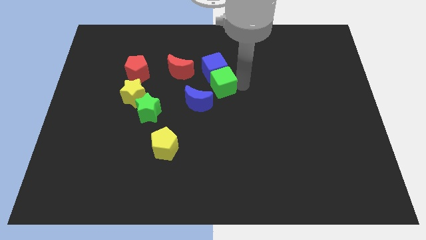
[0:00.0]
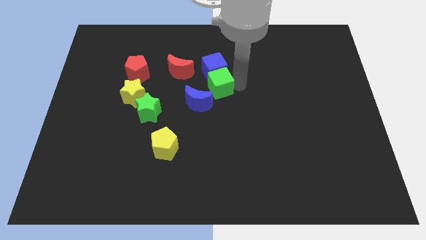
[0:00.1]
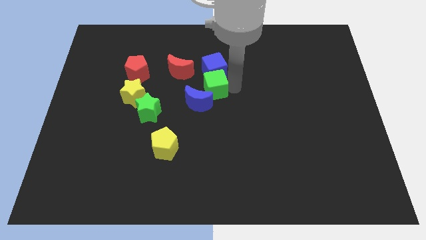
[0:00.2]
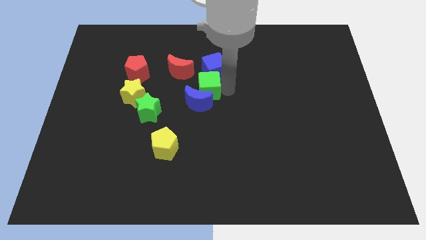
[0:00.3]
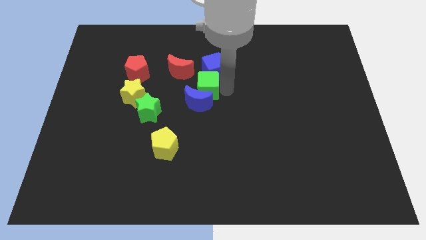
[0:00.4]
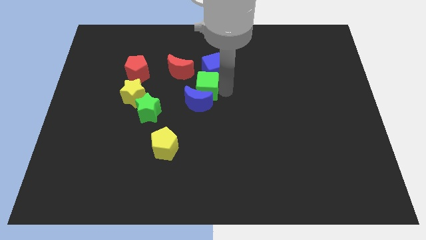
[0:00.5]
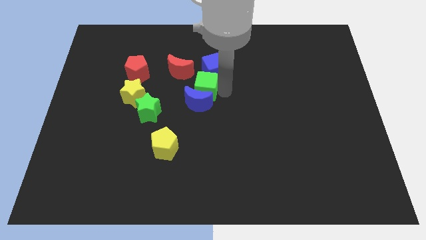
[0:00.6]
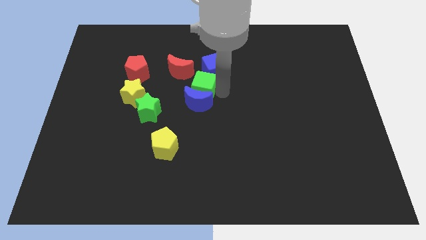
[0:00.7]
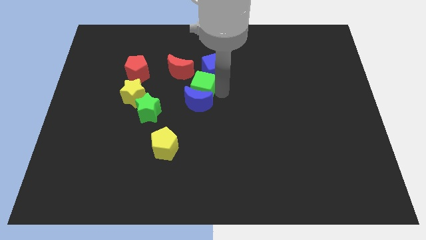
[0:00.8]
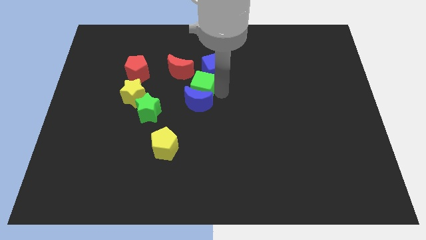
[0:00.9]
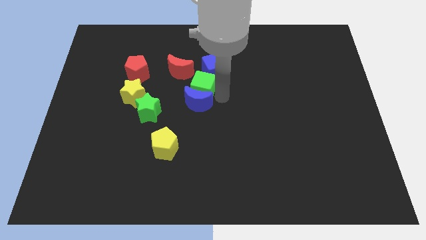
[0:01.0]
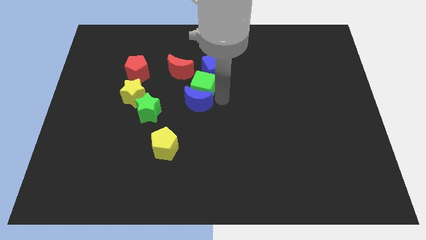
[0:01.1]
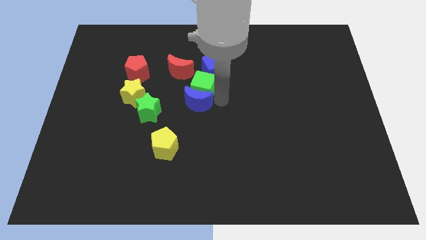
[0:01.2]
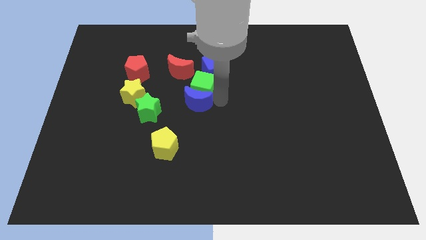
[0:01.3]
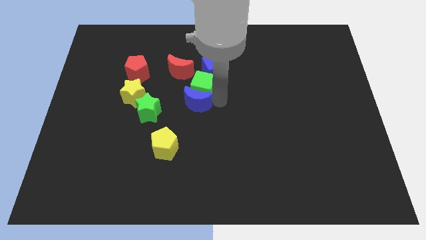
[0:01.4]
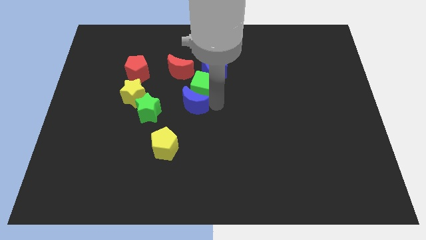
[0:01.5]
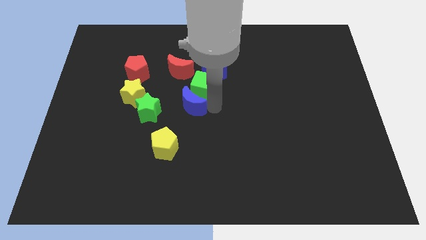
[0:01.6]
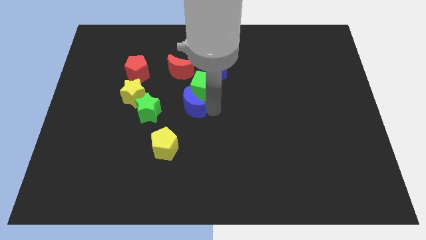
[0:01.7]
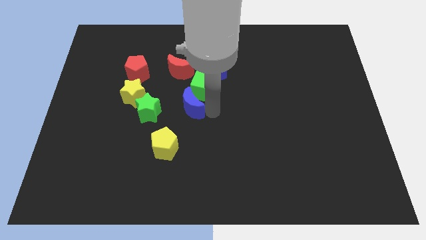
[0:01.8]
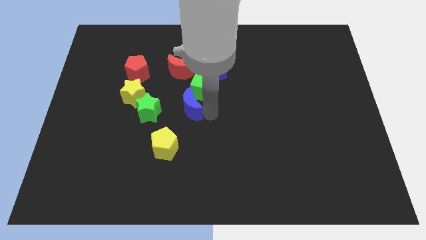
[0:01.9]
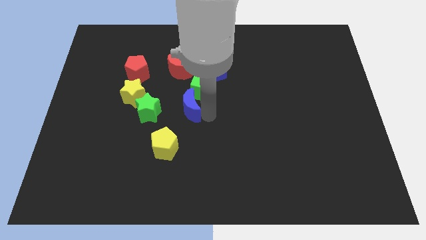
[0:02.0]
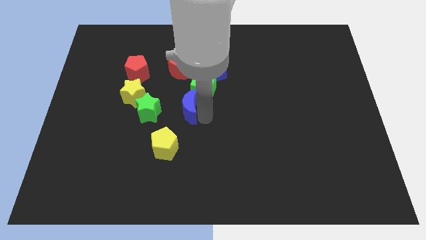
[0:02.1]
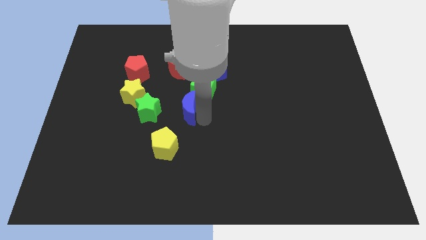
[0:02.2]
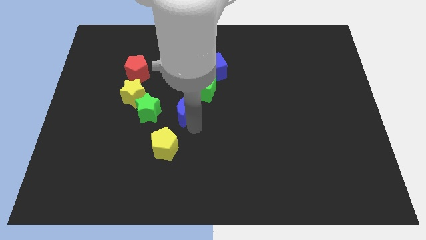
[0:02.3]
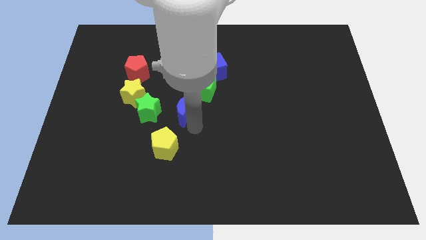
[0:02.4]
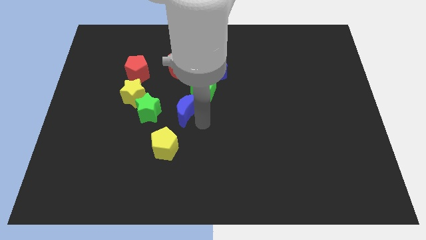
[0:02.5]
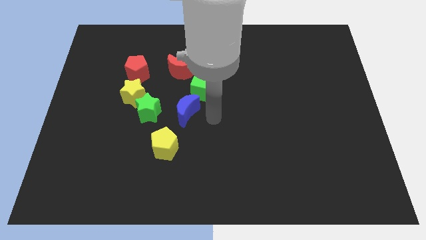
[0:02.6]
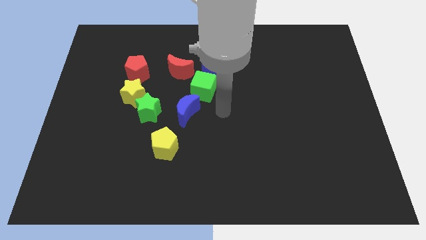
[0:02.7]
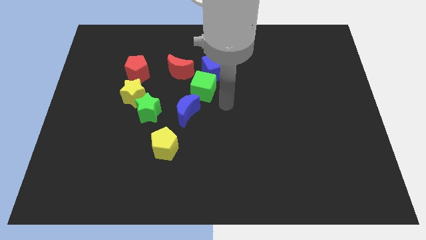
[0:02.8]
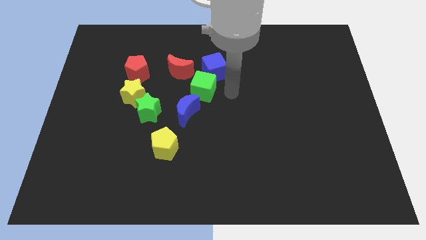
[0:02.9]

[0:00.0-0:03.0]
place green cube between blue moon and blue cube

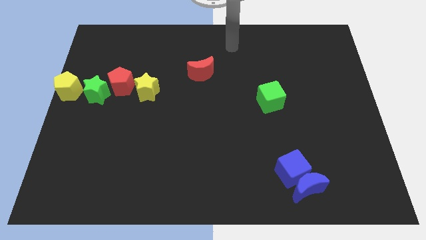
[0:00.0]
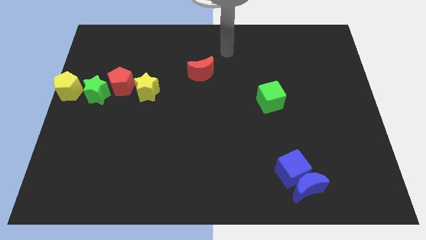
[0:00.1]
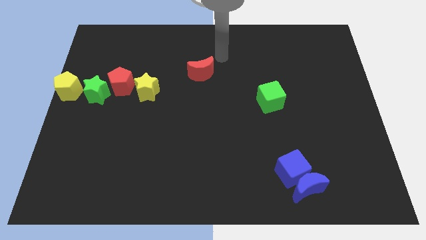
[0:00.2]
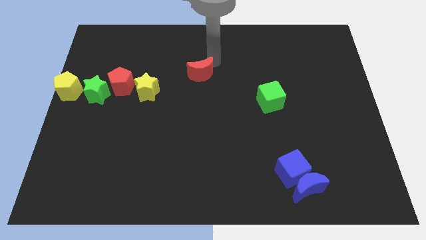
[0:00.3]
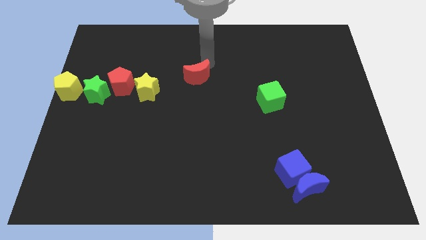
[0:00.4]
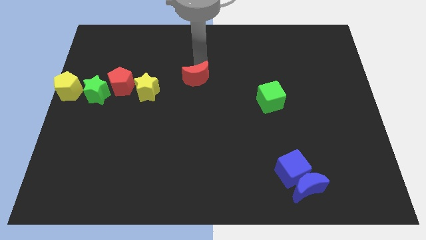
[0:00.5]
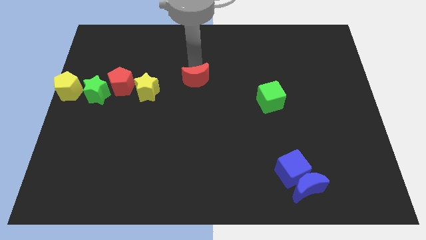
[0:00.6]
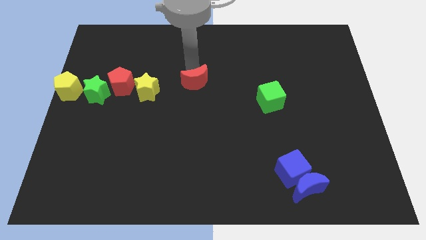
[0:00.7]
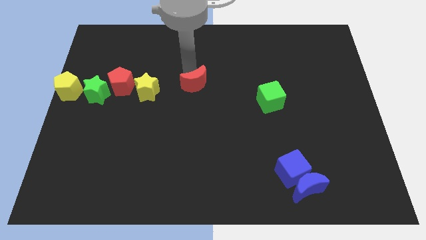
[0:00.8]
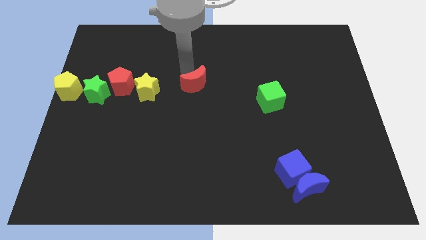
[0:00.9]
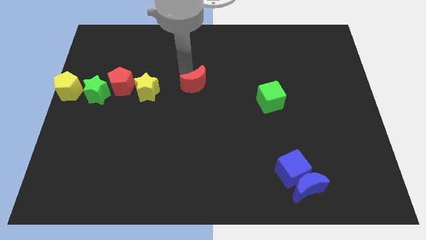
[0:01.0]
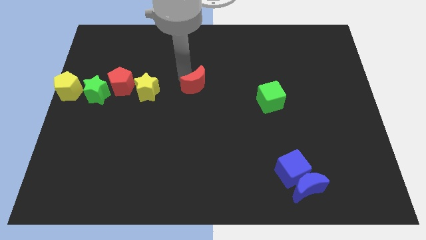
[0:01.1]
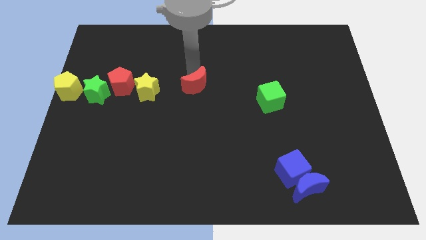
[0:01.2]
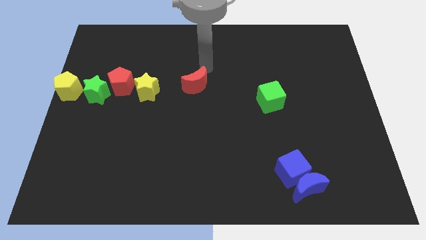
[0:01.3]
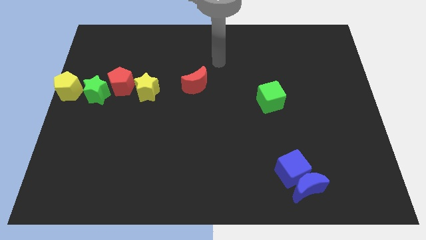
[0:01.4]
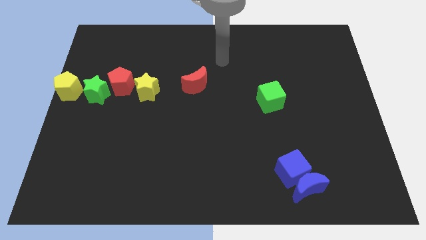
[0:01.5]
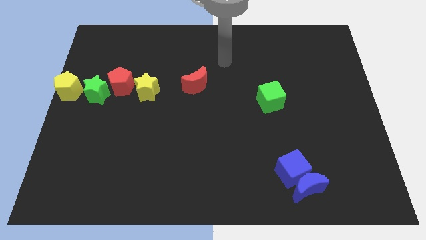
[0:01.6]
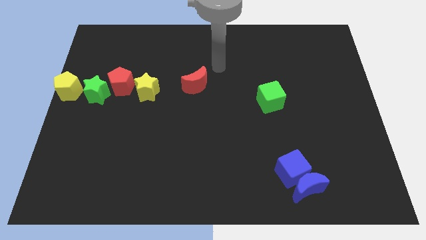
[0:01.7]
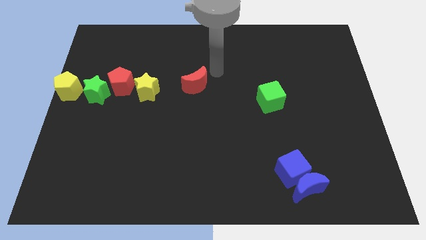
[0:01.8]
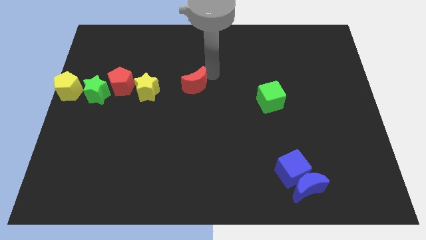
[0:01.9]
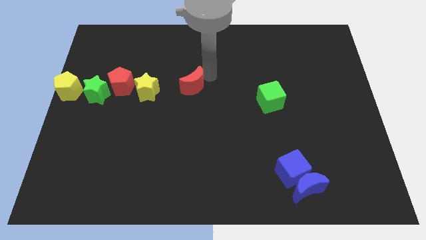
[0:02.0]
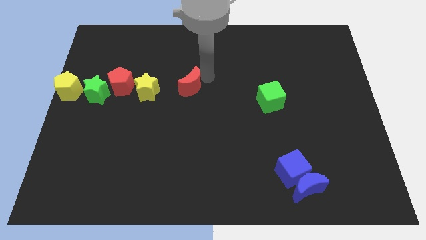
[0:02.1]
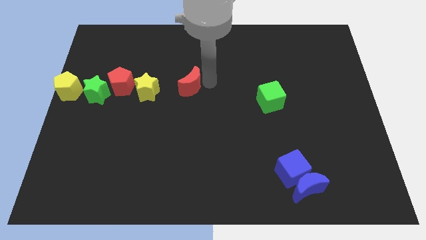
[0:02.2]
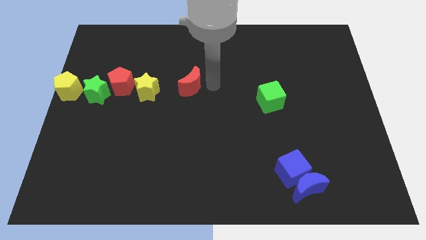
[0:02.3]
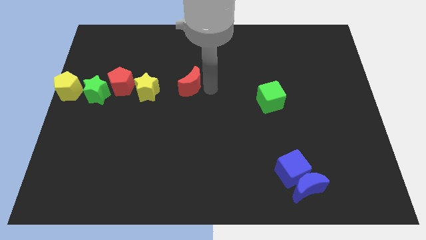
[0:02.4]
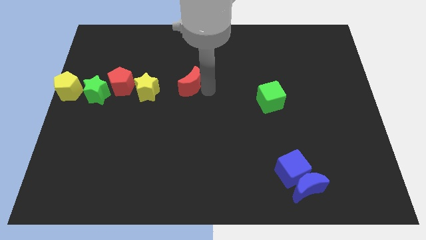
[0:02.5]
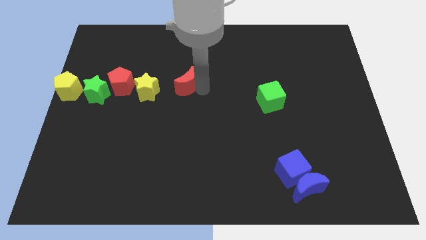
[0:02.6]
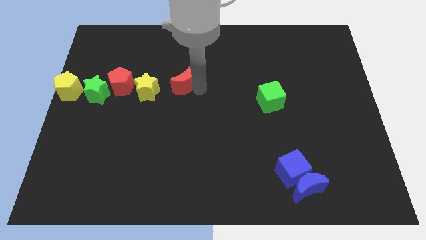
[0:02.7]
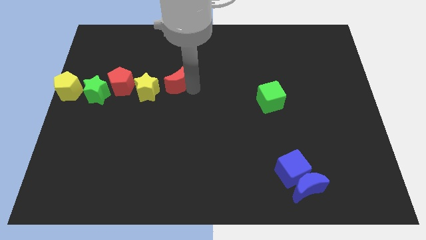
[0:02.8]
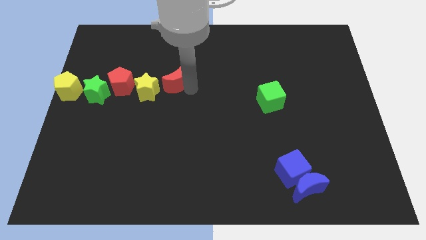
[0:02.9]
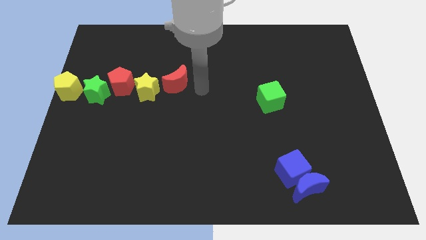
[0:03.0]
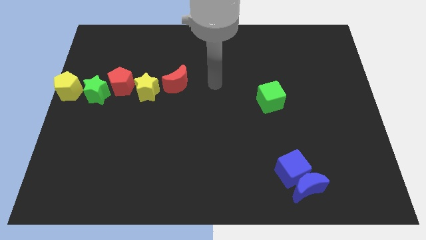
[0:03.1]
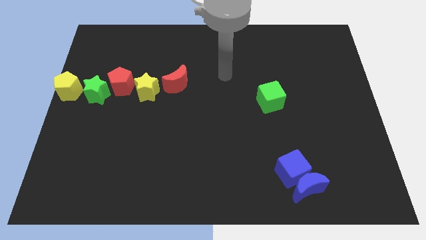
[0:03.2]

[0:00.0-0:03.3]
push the red moon close to the yellow star

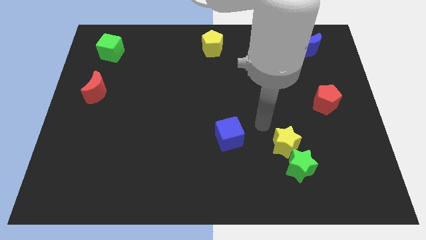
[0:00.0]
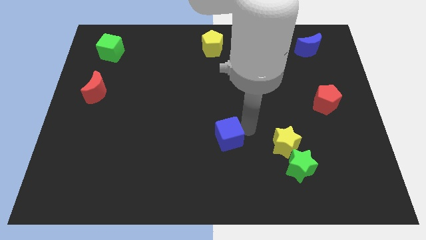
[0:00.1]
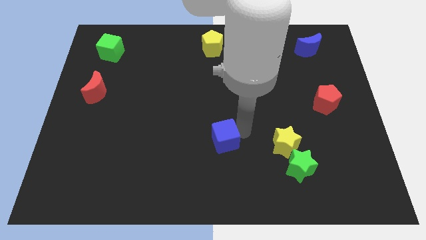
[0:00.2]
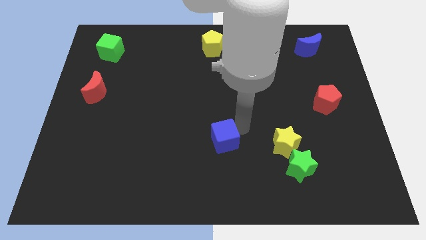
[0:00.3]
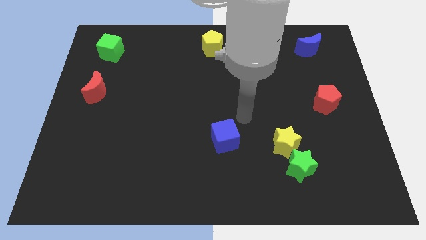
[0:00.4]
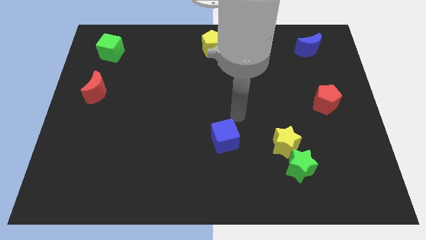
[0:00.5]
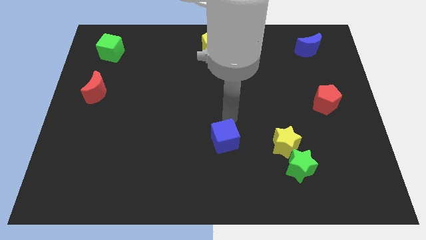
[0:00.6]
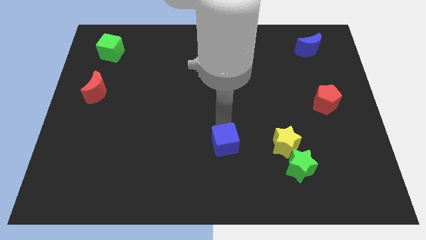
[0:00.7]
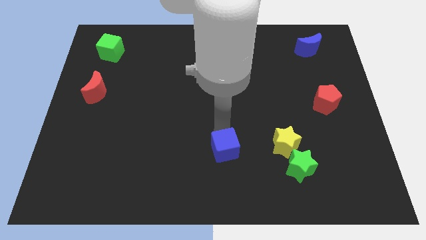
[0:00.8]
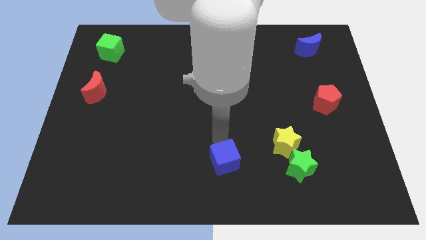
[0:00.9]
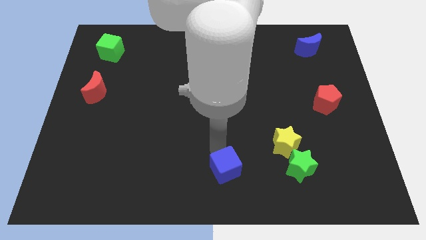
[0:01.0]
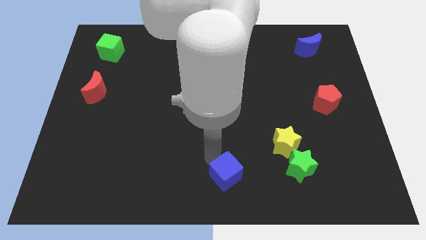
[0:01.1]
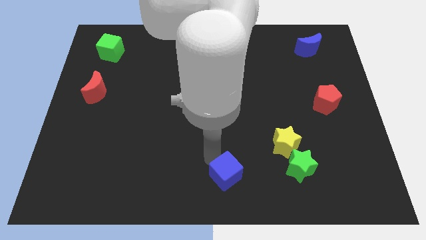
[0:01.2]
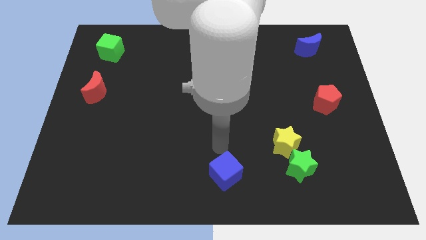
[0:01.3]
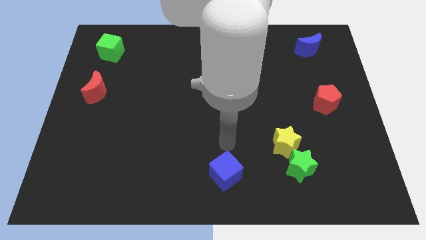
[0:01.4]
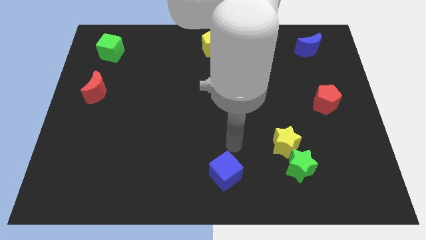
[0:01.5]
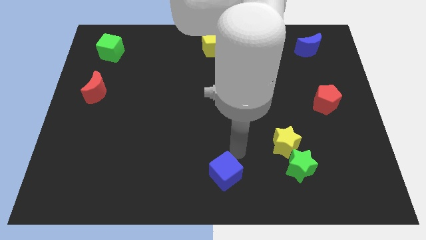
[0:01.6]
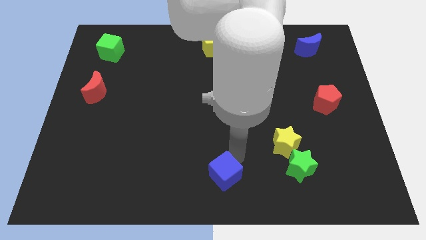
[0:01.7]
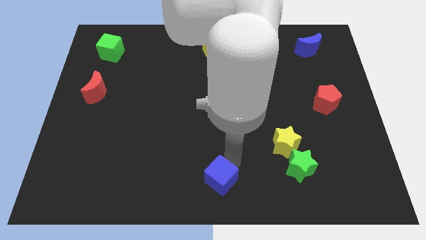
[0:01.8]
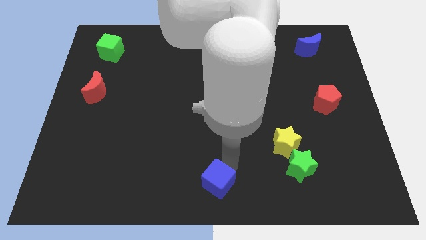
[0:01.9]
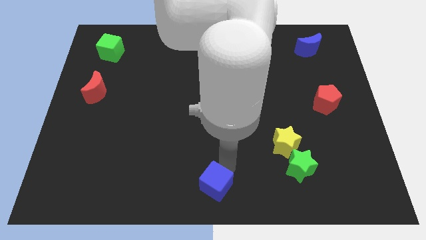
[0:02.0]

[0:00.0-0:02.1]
push blue cube to the bottom center

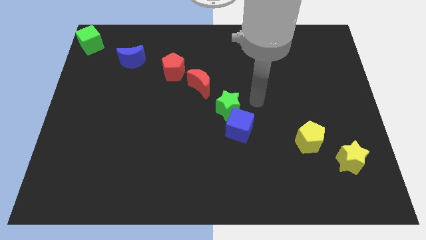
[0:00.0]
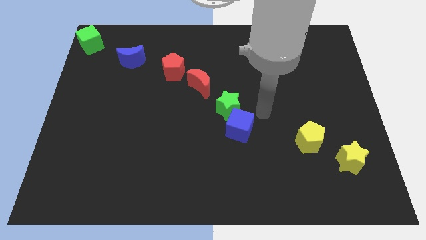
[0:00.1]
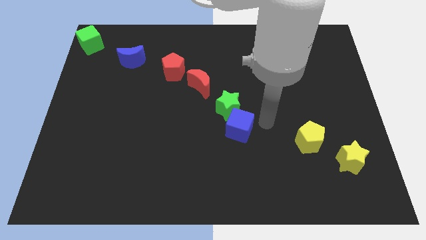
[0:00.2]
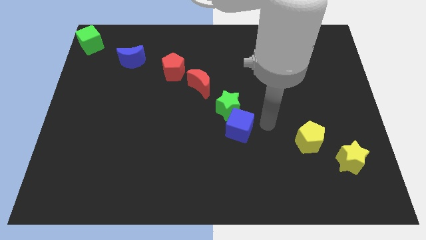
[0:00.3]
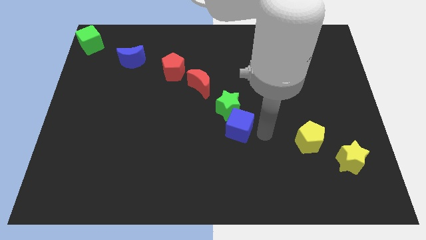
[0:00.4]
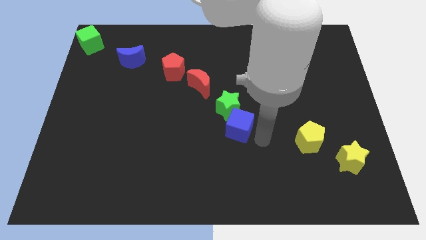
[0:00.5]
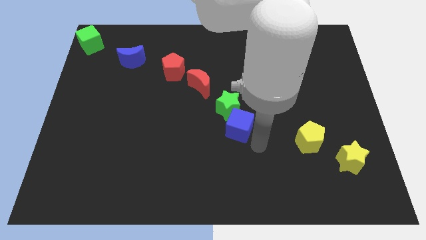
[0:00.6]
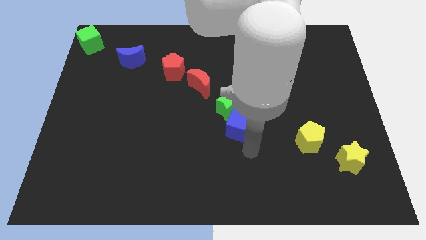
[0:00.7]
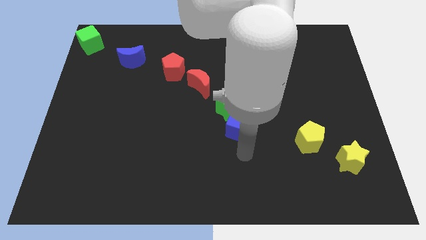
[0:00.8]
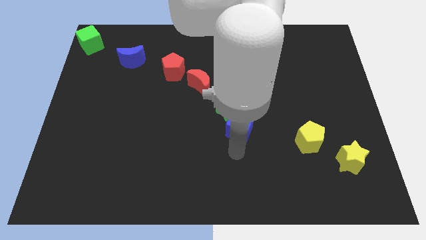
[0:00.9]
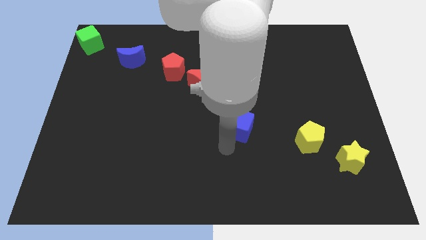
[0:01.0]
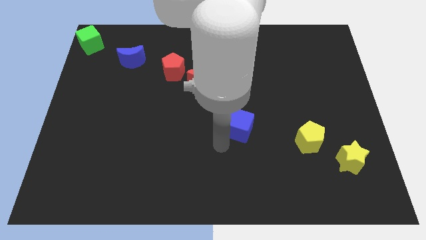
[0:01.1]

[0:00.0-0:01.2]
place your arm below the blue cube
